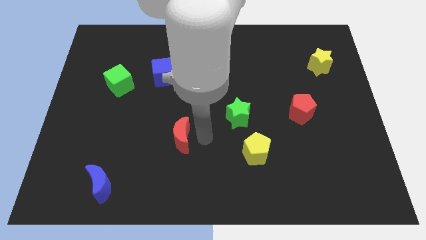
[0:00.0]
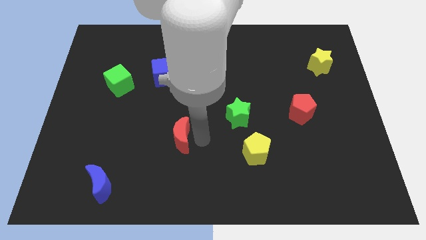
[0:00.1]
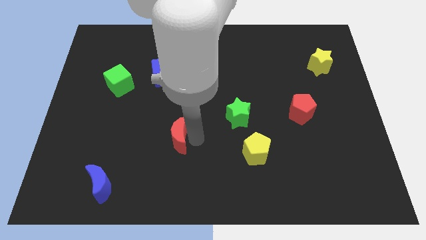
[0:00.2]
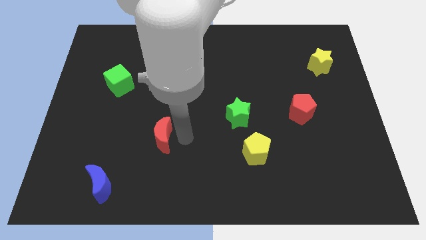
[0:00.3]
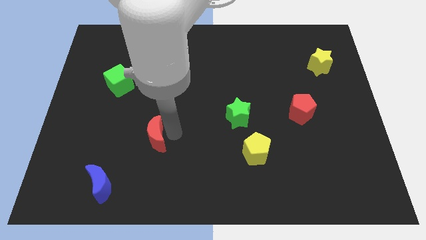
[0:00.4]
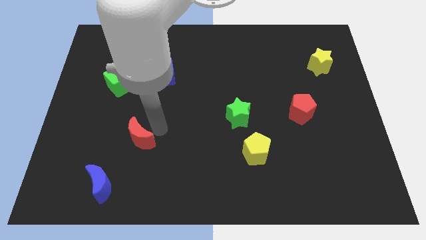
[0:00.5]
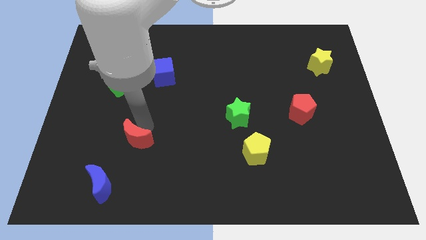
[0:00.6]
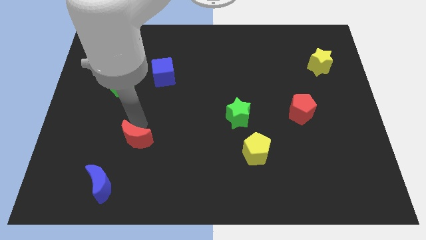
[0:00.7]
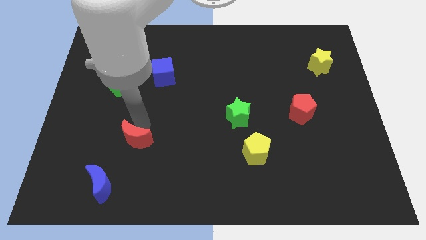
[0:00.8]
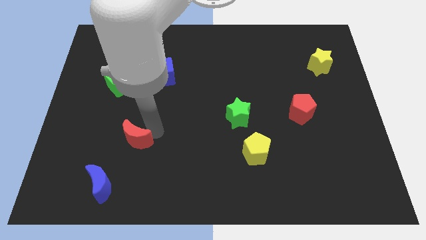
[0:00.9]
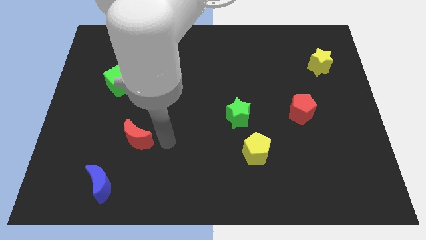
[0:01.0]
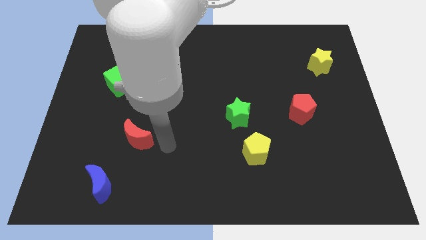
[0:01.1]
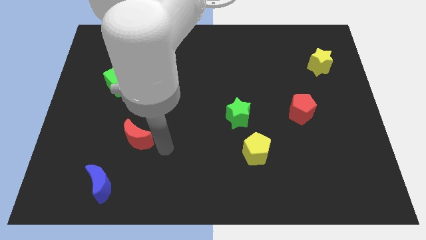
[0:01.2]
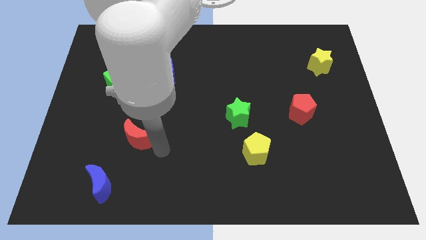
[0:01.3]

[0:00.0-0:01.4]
push the red crescent diagonally on the top right side of the blue crescent

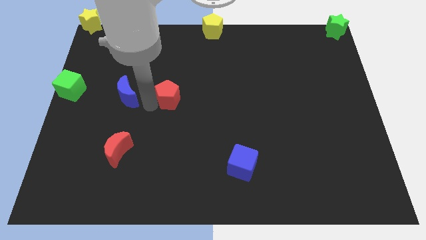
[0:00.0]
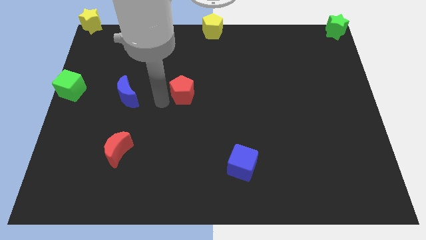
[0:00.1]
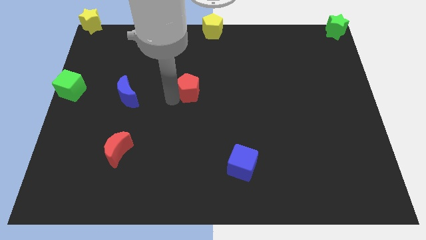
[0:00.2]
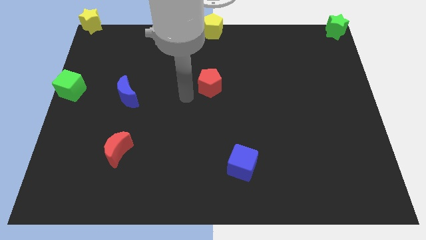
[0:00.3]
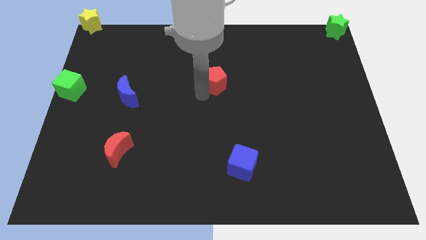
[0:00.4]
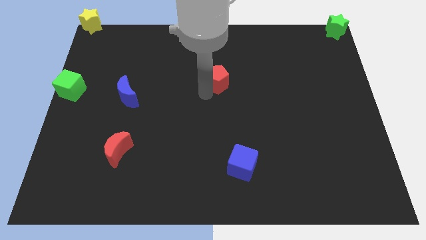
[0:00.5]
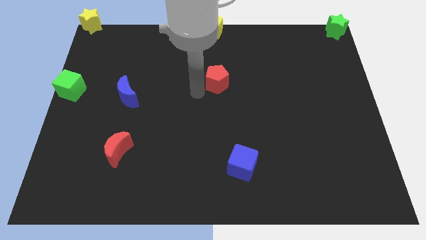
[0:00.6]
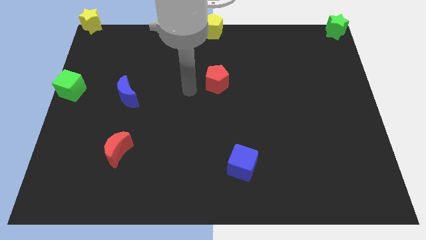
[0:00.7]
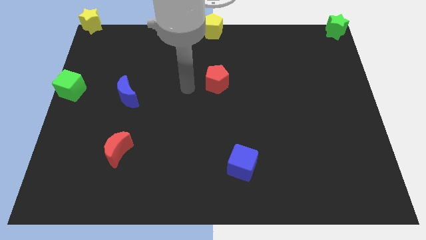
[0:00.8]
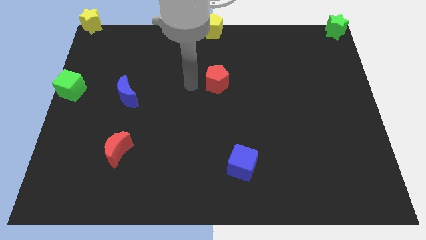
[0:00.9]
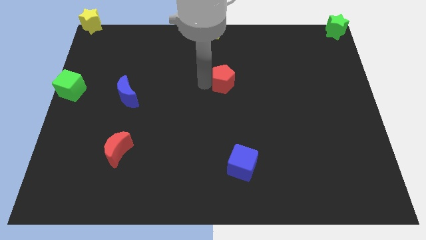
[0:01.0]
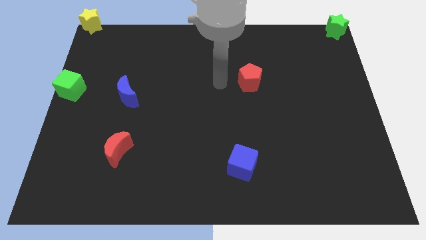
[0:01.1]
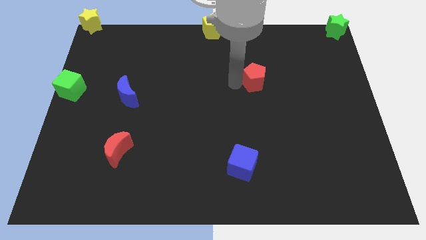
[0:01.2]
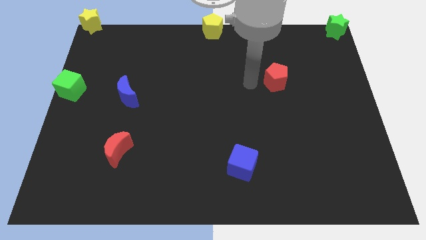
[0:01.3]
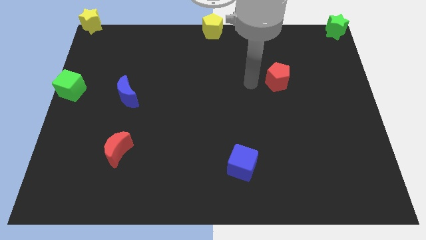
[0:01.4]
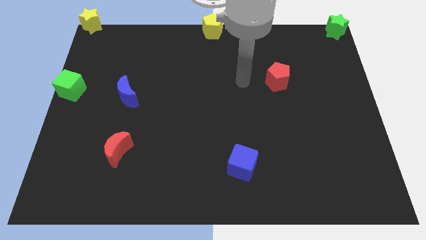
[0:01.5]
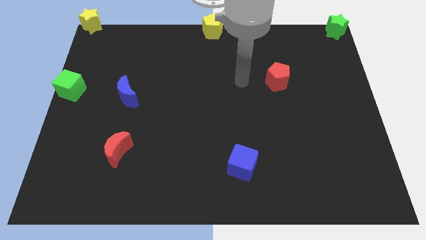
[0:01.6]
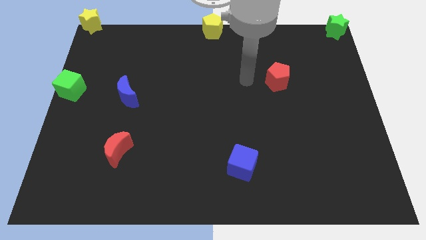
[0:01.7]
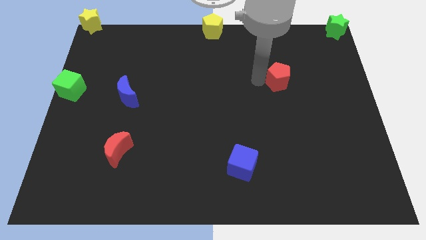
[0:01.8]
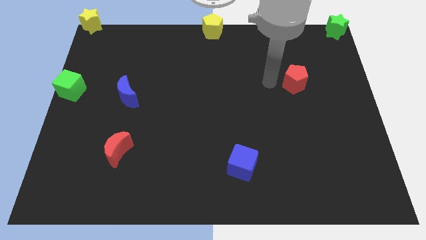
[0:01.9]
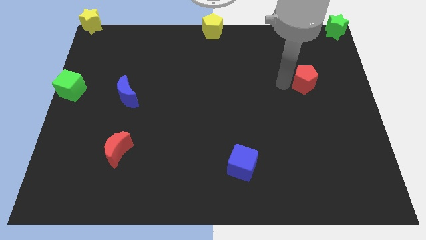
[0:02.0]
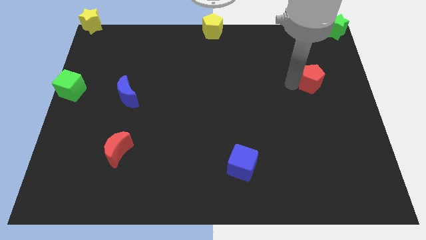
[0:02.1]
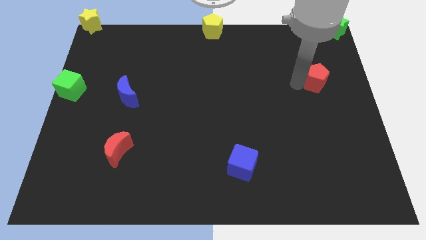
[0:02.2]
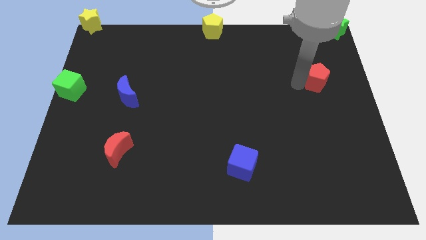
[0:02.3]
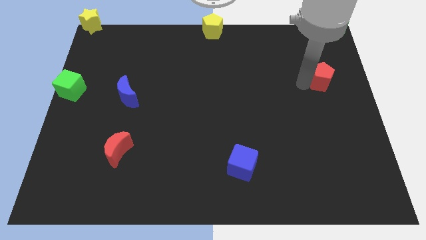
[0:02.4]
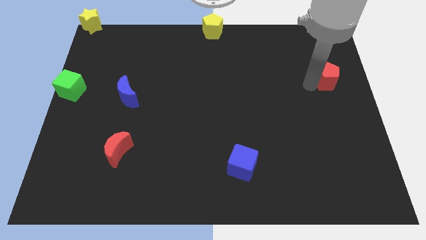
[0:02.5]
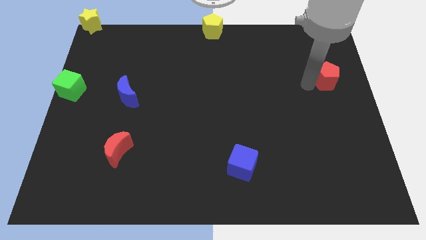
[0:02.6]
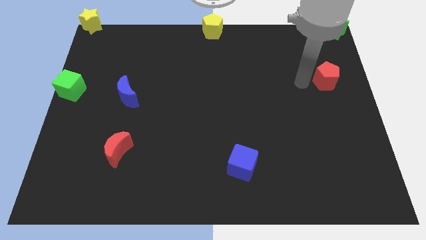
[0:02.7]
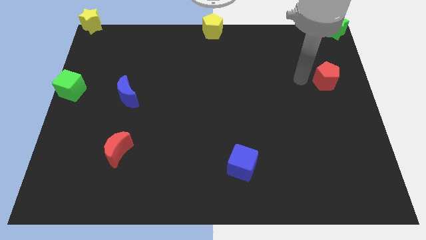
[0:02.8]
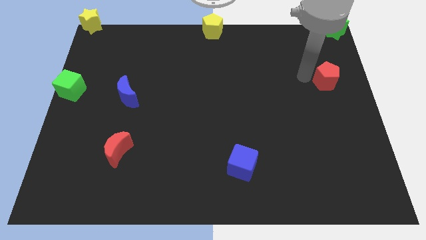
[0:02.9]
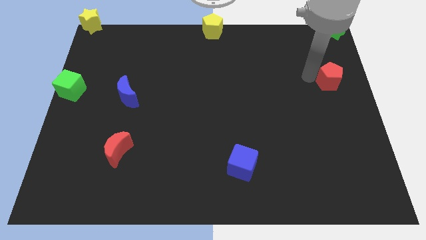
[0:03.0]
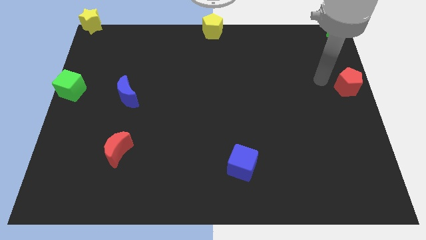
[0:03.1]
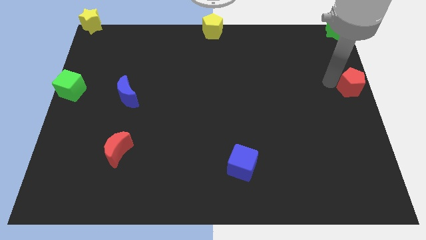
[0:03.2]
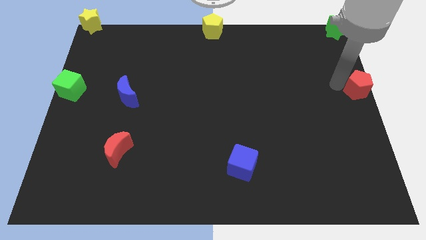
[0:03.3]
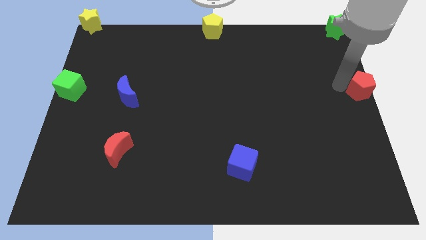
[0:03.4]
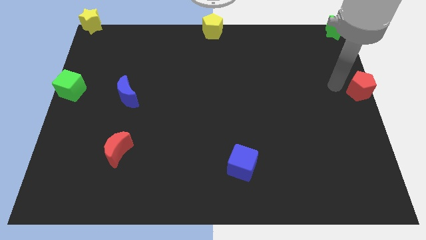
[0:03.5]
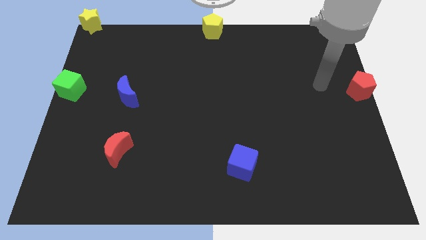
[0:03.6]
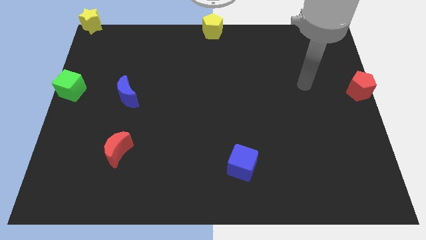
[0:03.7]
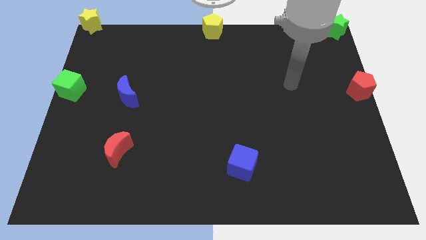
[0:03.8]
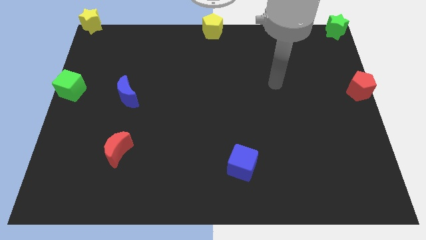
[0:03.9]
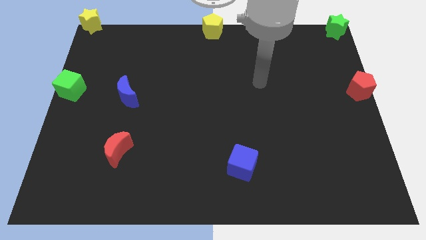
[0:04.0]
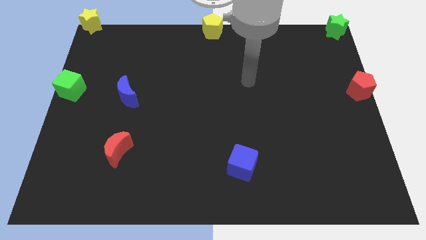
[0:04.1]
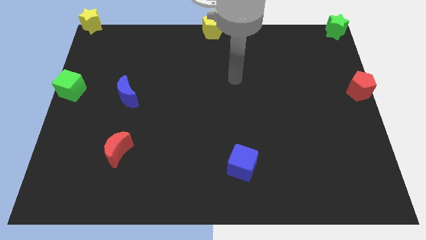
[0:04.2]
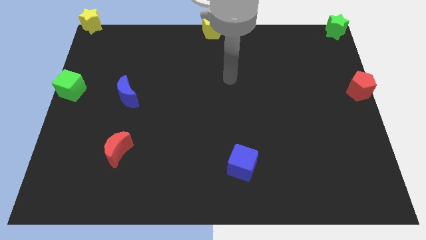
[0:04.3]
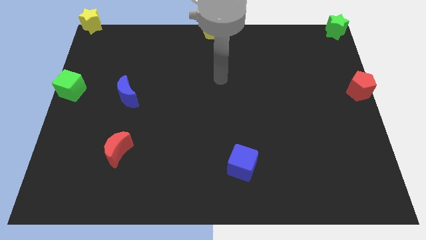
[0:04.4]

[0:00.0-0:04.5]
place the red pentagon to the middle right of the board

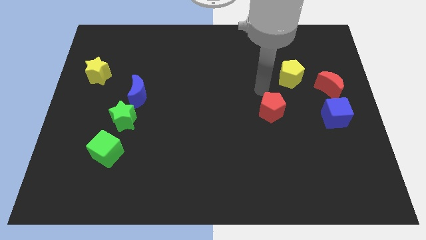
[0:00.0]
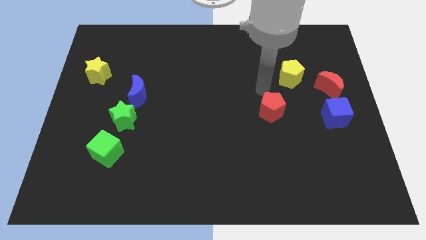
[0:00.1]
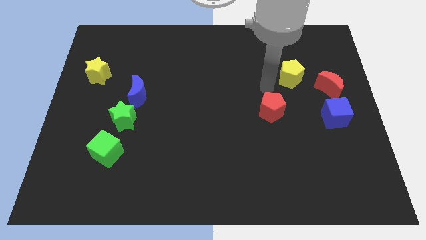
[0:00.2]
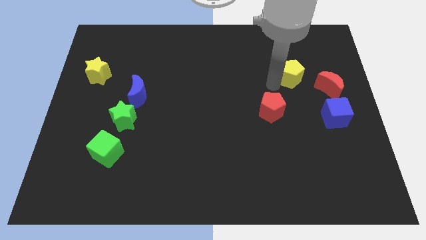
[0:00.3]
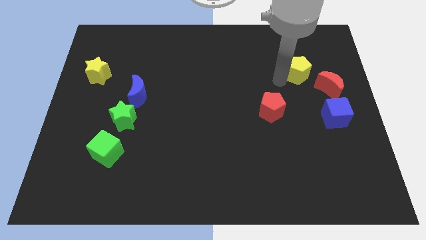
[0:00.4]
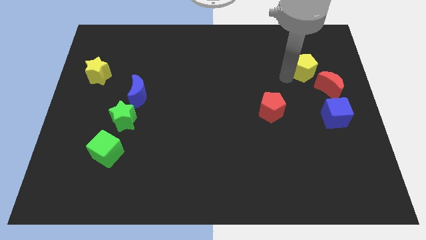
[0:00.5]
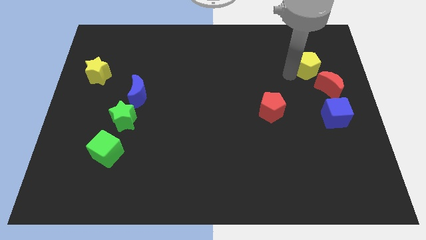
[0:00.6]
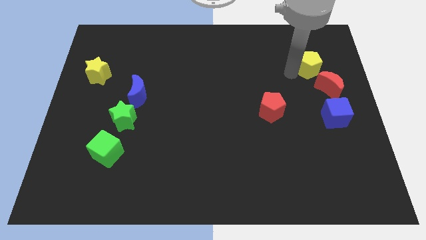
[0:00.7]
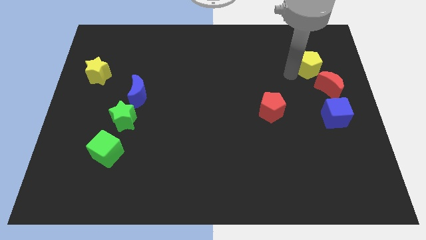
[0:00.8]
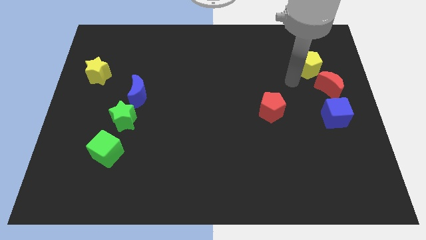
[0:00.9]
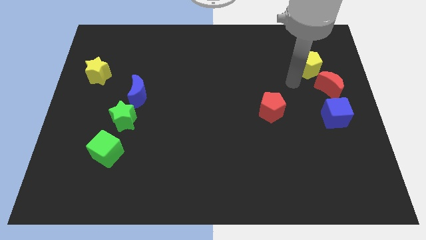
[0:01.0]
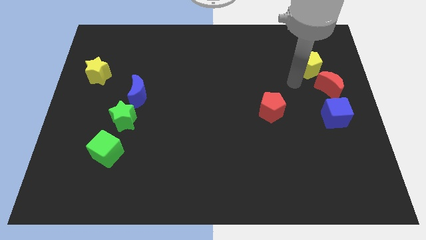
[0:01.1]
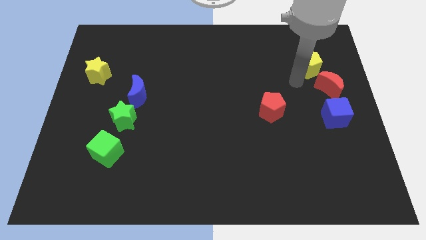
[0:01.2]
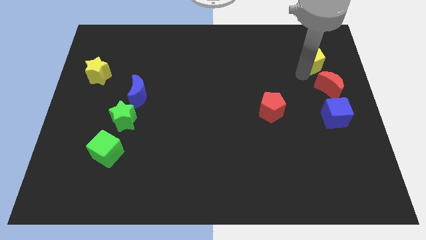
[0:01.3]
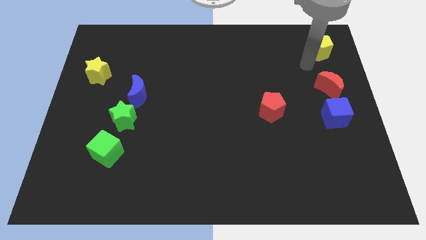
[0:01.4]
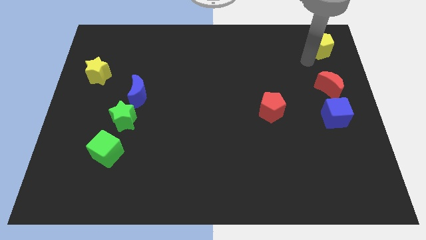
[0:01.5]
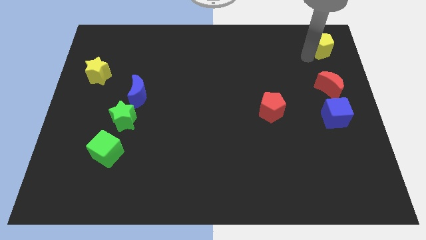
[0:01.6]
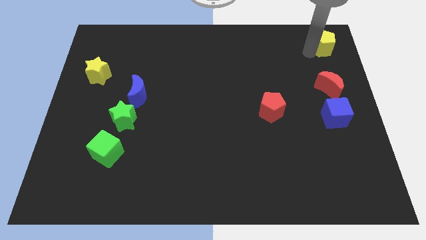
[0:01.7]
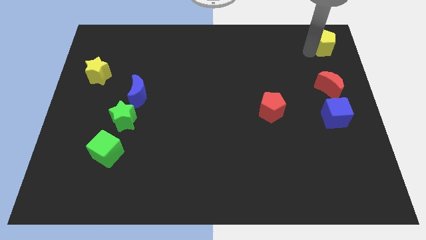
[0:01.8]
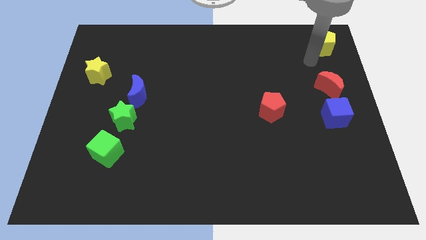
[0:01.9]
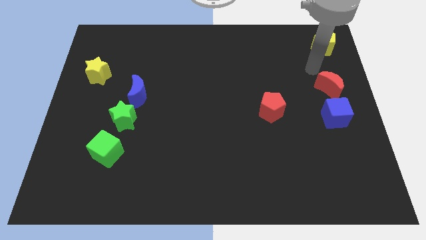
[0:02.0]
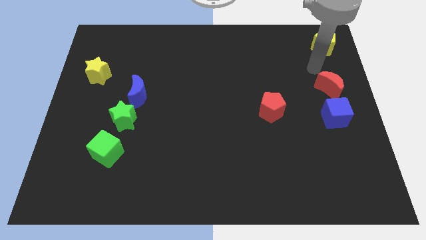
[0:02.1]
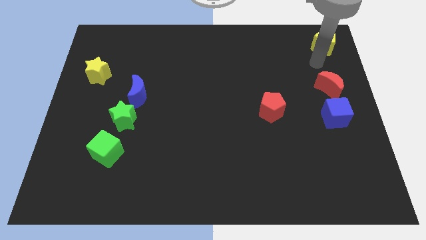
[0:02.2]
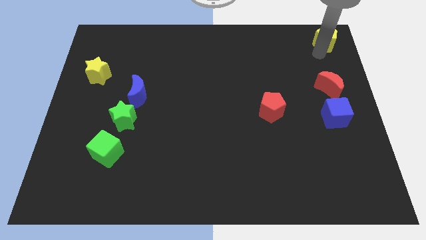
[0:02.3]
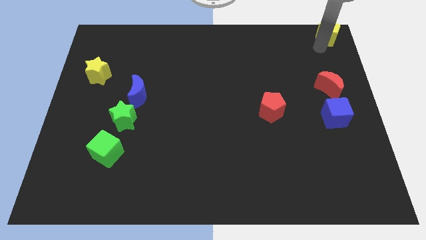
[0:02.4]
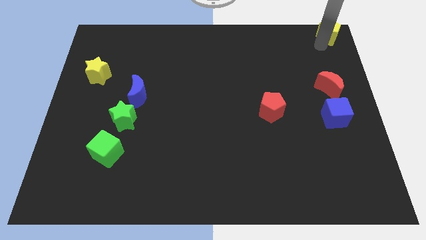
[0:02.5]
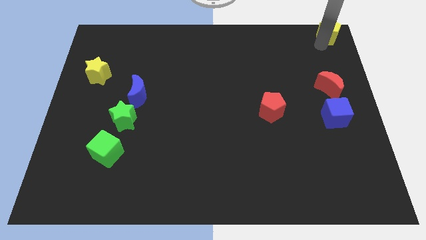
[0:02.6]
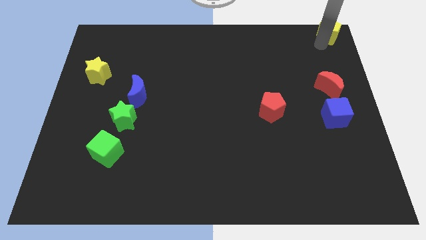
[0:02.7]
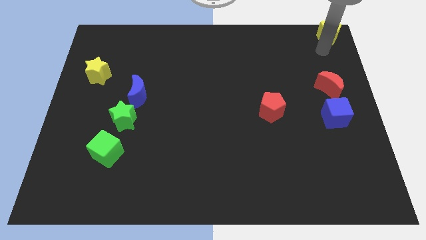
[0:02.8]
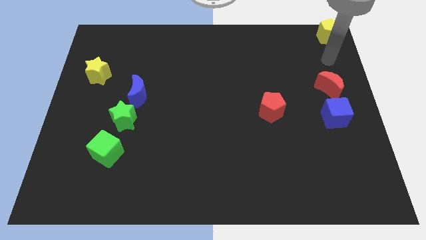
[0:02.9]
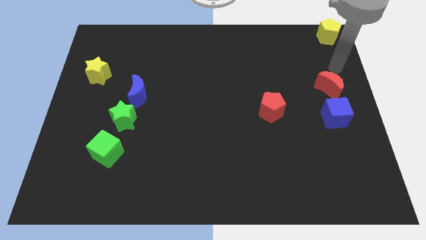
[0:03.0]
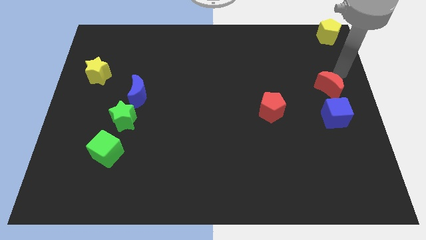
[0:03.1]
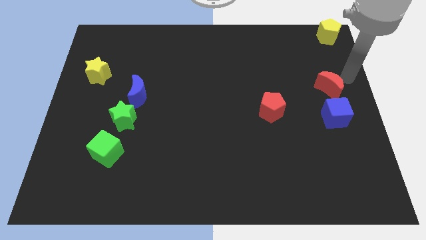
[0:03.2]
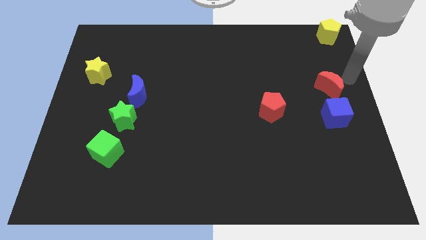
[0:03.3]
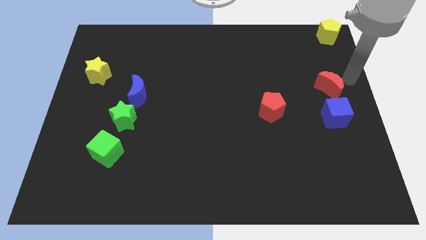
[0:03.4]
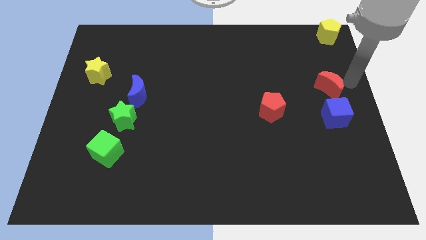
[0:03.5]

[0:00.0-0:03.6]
place the yellow pentagon to the top right corner of the board
